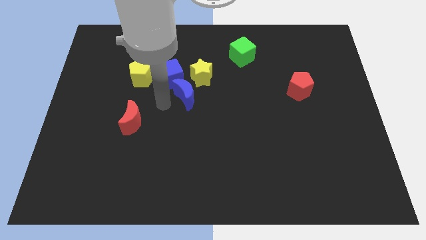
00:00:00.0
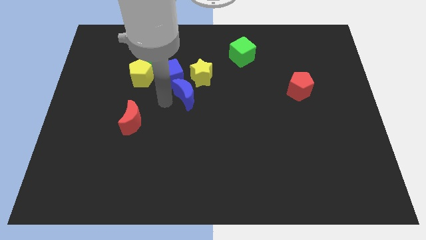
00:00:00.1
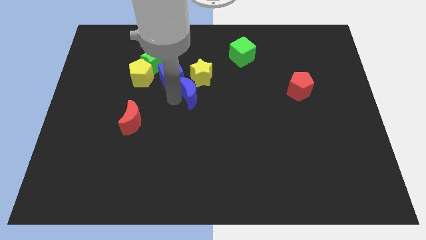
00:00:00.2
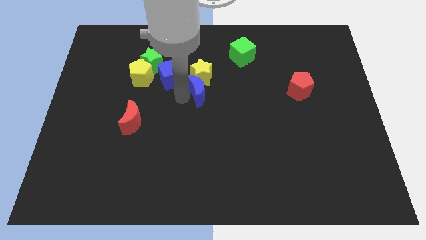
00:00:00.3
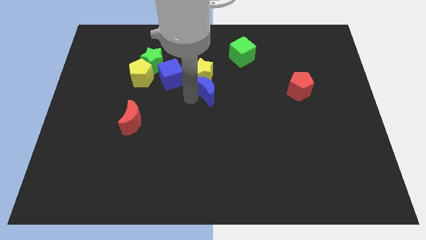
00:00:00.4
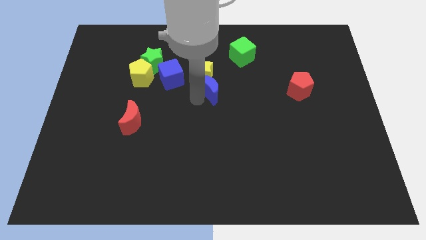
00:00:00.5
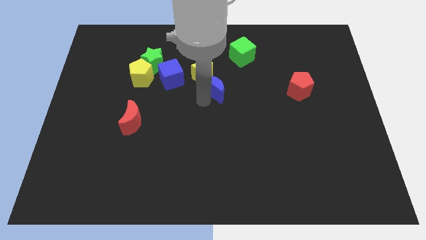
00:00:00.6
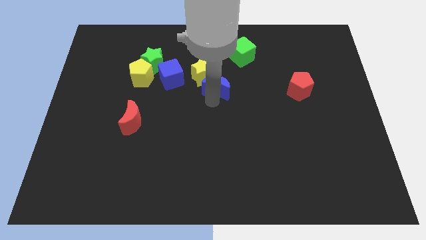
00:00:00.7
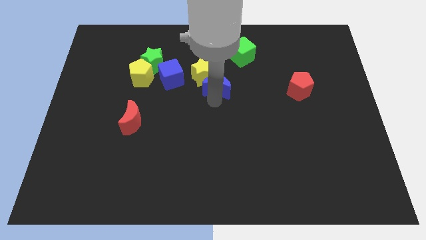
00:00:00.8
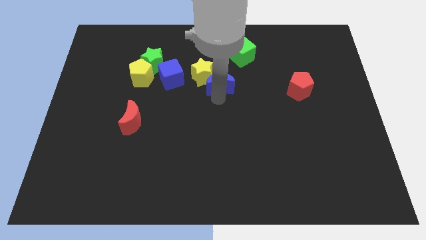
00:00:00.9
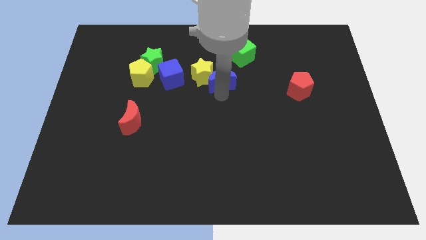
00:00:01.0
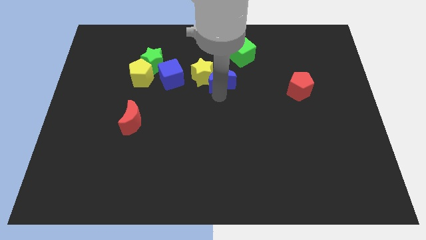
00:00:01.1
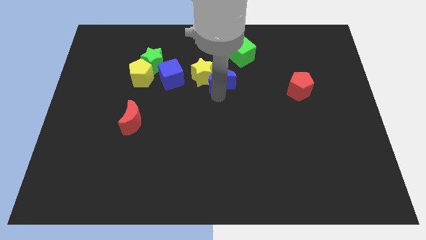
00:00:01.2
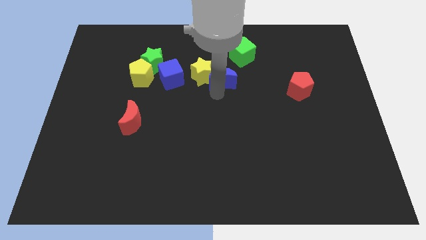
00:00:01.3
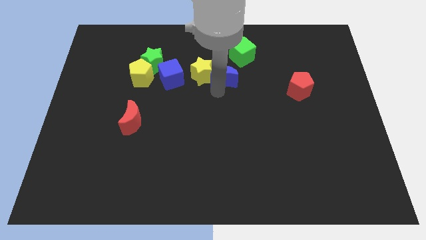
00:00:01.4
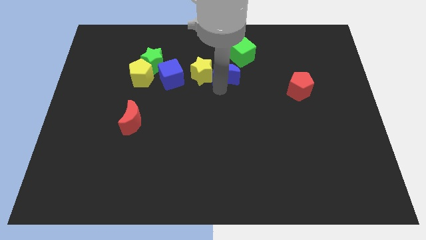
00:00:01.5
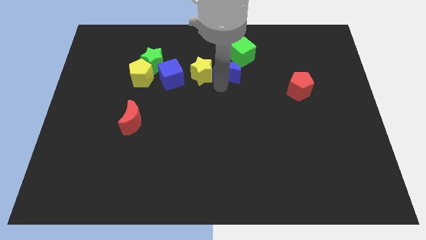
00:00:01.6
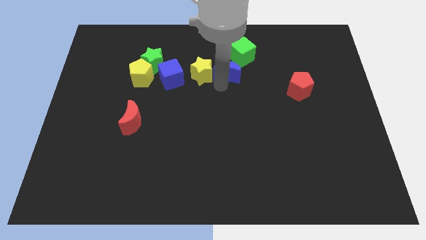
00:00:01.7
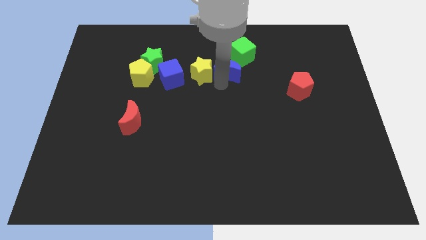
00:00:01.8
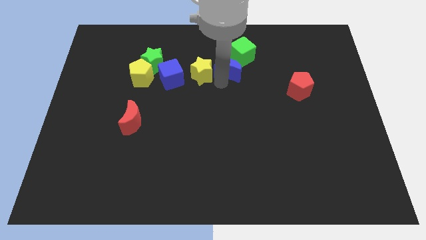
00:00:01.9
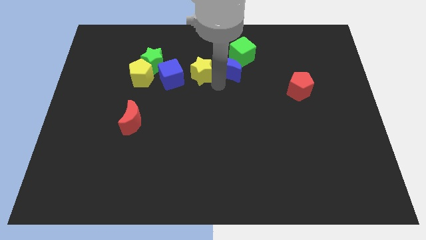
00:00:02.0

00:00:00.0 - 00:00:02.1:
move the blue moon below to the green cube

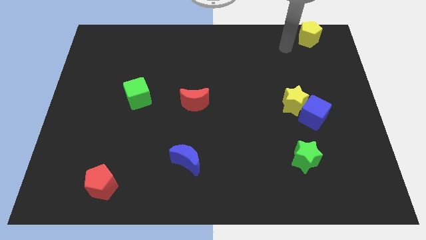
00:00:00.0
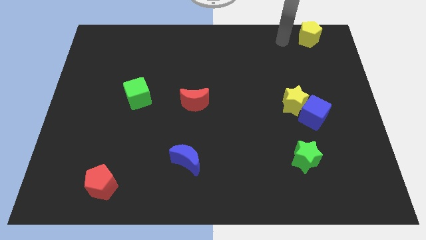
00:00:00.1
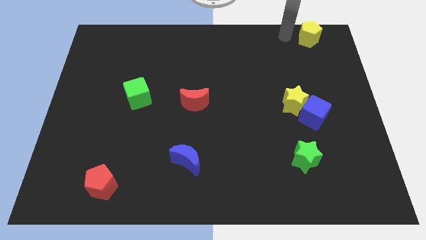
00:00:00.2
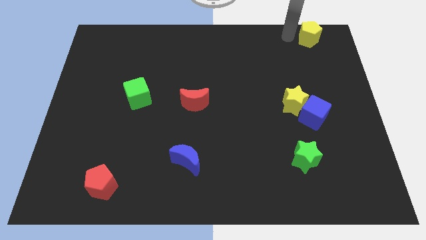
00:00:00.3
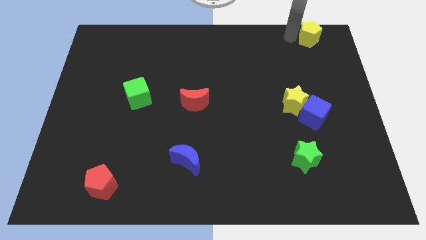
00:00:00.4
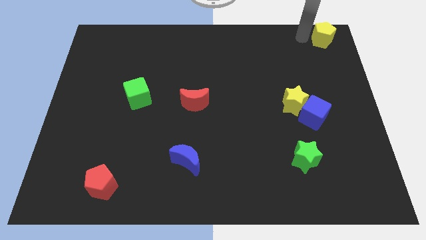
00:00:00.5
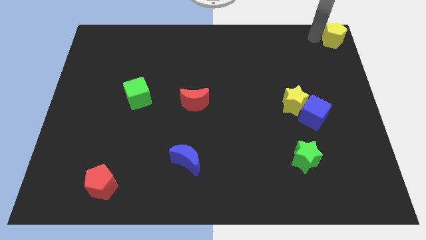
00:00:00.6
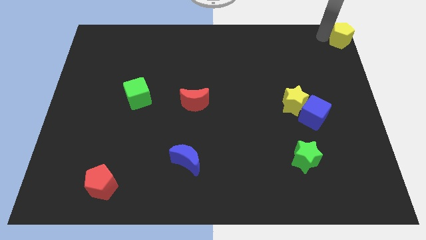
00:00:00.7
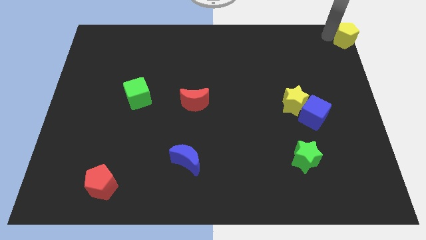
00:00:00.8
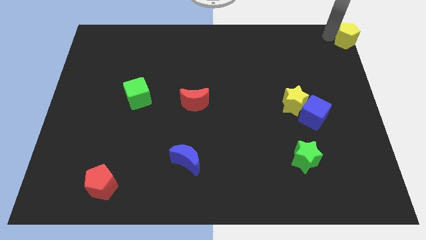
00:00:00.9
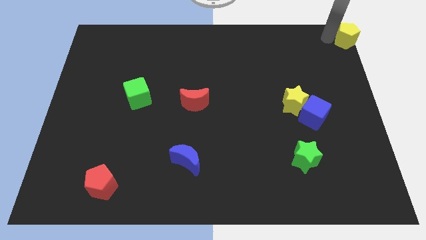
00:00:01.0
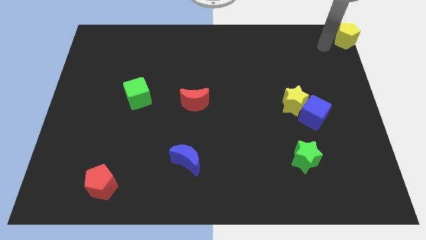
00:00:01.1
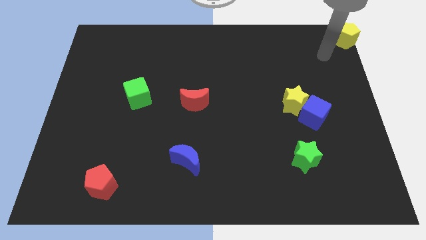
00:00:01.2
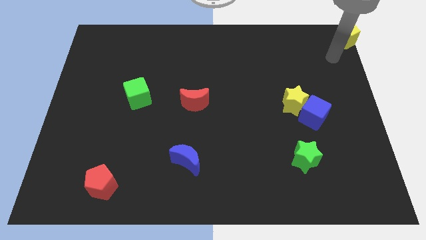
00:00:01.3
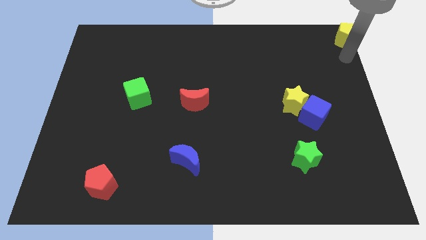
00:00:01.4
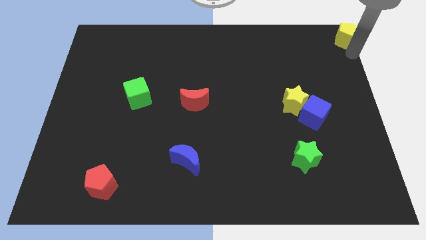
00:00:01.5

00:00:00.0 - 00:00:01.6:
move the yellow pentagon to the top right corner of the board

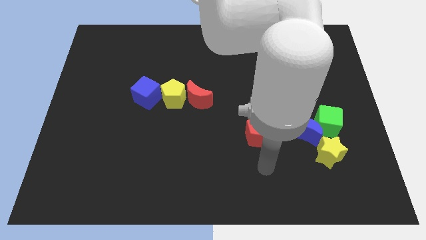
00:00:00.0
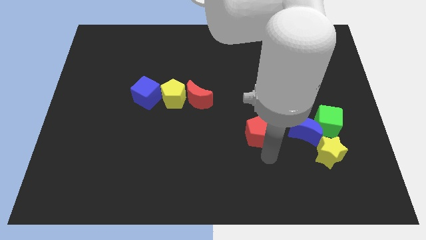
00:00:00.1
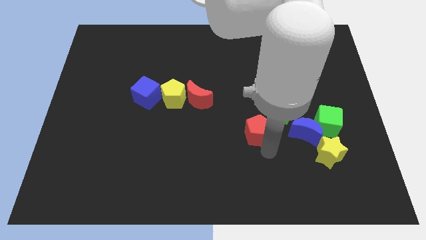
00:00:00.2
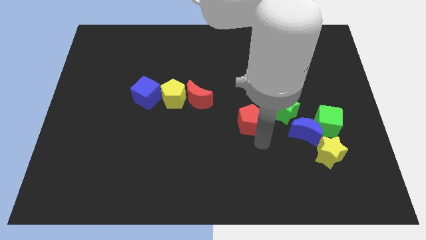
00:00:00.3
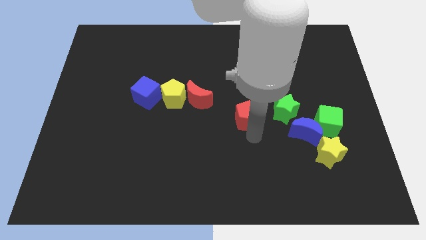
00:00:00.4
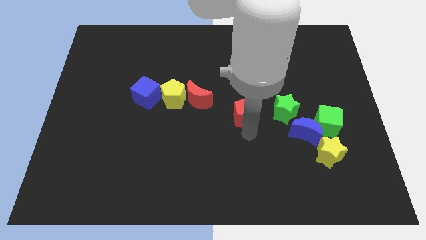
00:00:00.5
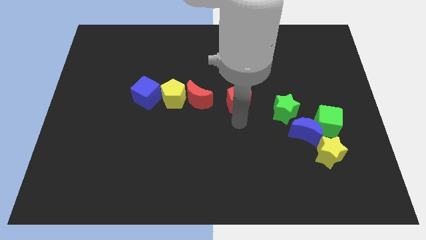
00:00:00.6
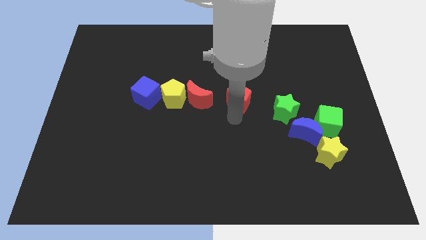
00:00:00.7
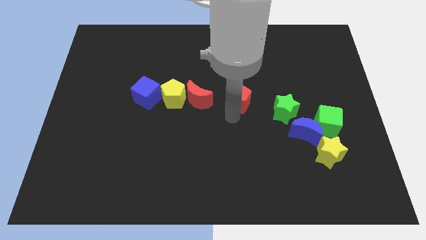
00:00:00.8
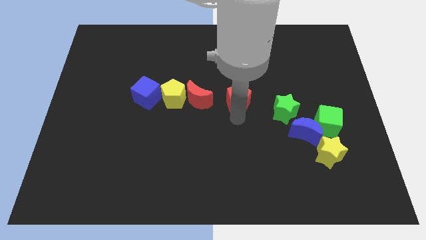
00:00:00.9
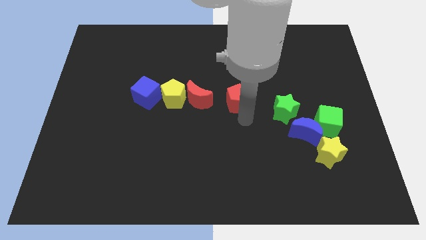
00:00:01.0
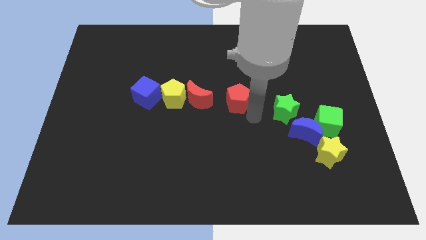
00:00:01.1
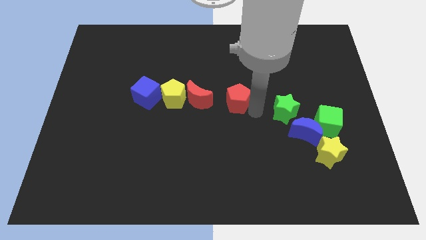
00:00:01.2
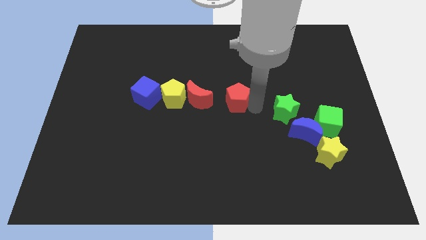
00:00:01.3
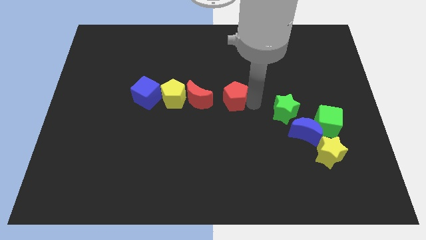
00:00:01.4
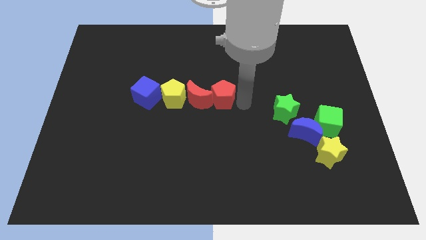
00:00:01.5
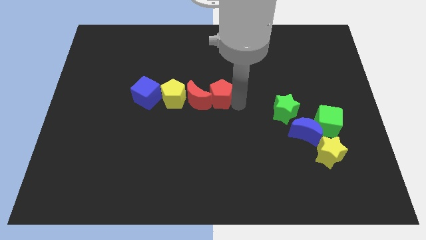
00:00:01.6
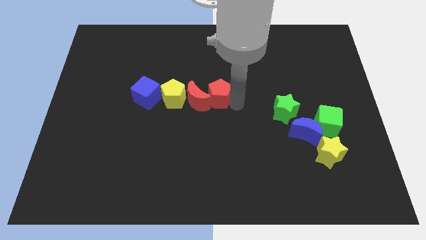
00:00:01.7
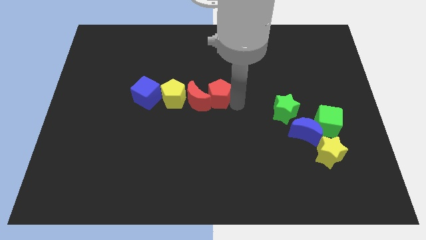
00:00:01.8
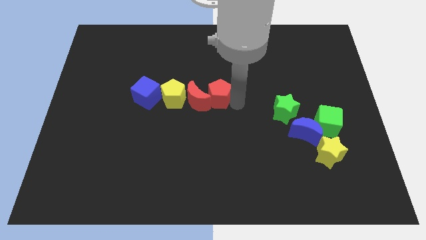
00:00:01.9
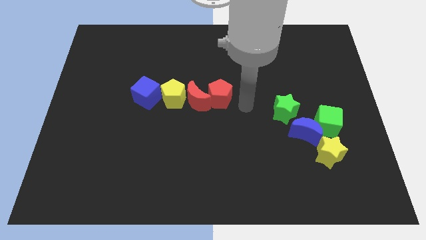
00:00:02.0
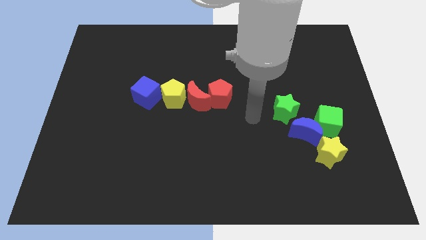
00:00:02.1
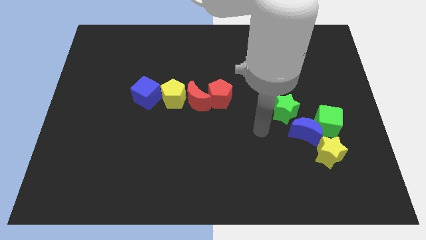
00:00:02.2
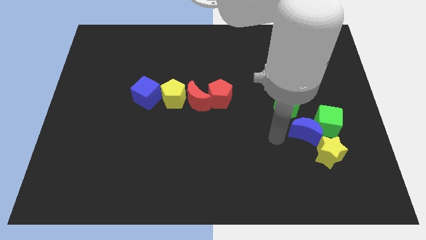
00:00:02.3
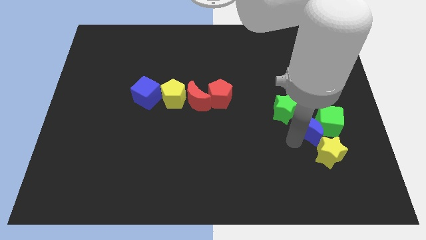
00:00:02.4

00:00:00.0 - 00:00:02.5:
push the red pentagon to the right of the red crescent

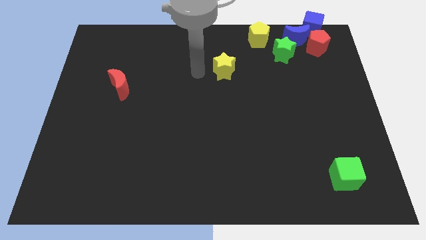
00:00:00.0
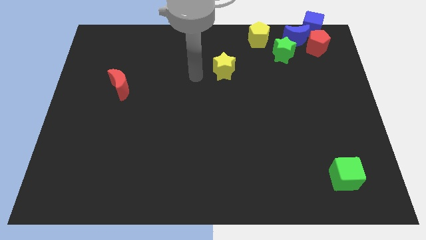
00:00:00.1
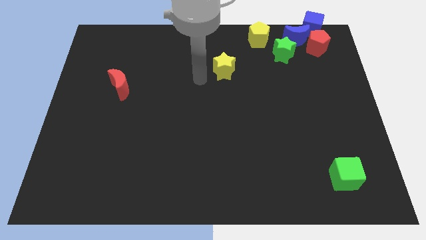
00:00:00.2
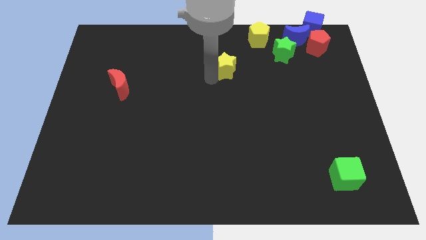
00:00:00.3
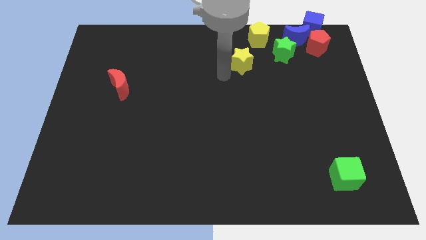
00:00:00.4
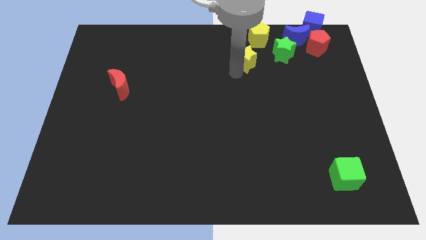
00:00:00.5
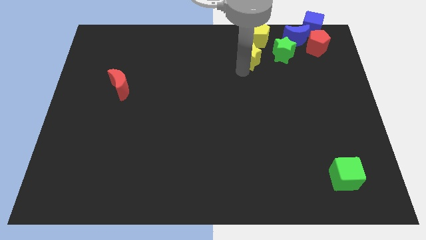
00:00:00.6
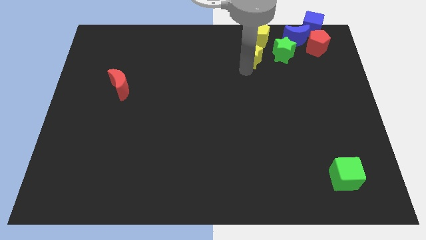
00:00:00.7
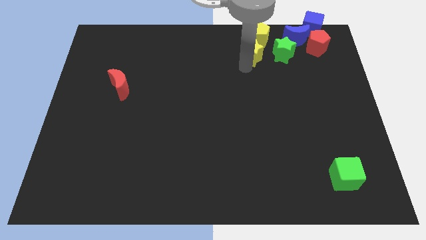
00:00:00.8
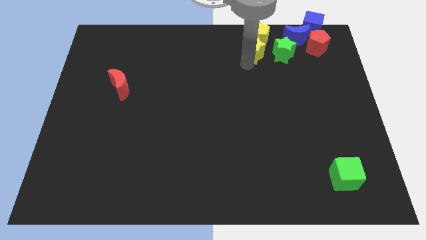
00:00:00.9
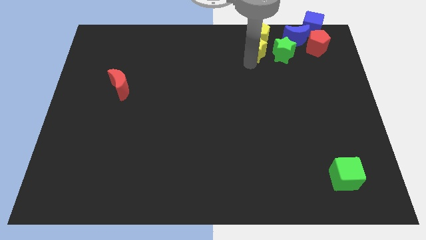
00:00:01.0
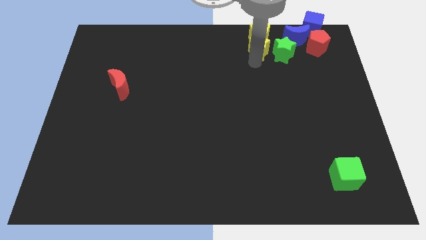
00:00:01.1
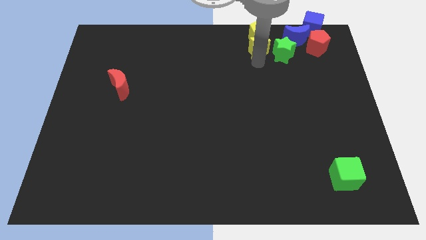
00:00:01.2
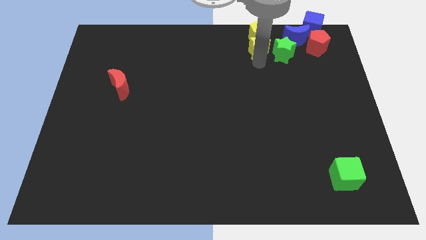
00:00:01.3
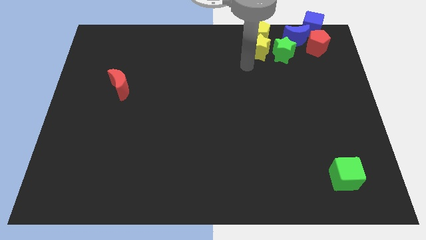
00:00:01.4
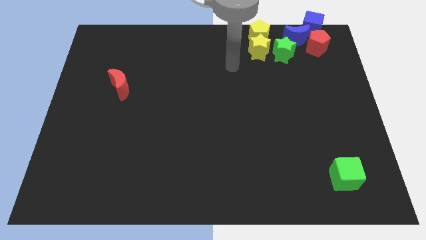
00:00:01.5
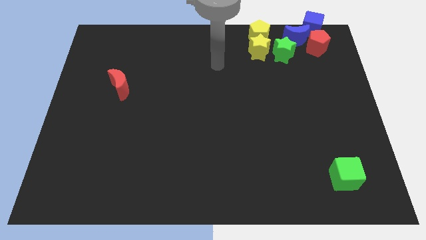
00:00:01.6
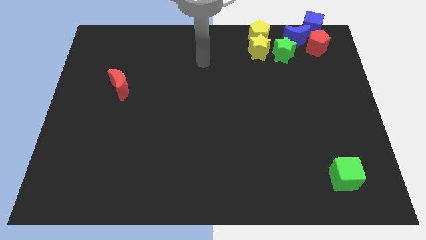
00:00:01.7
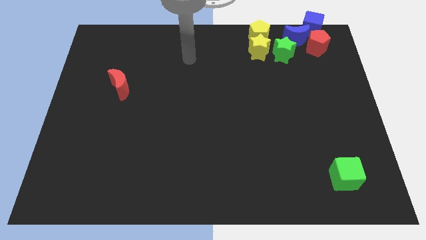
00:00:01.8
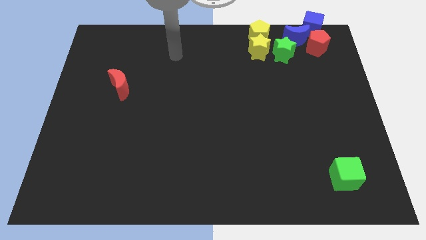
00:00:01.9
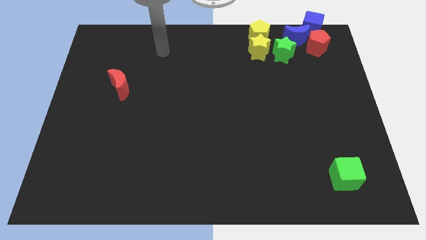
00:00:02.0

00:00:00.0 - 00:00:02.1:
place the yellow star at the bottom of the yellow pentagon

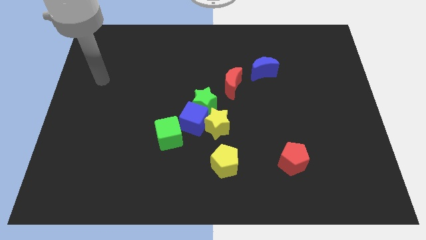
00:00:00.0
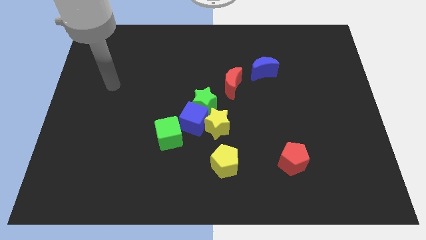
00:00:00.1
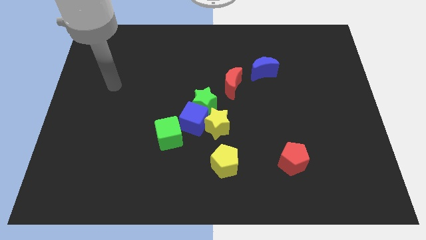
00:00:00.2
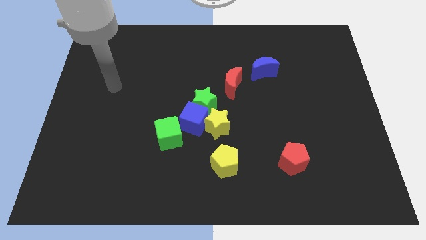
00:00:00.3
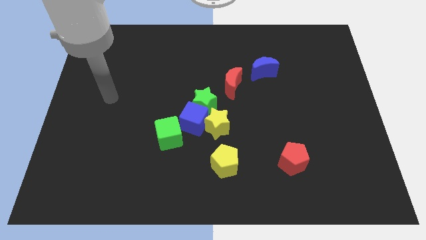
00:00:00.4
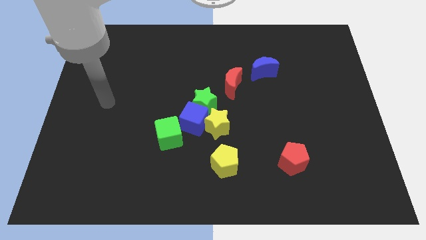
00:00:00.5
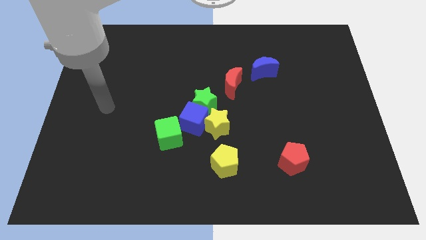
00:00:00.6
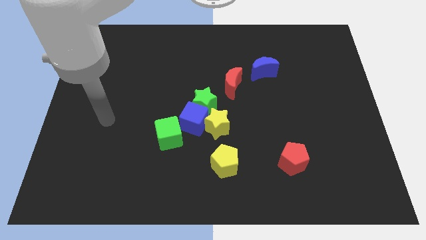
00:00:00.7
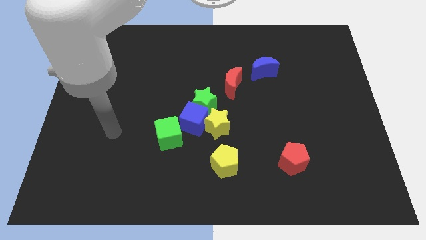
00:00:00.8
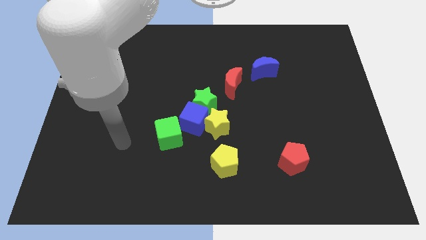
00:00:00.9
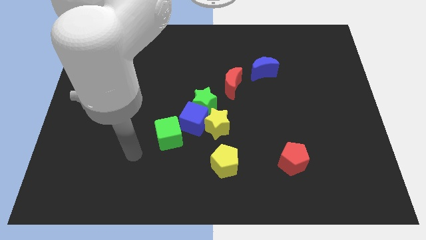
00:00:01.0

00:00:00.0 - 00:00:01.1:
move arm towards green cube
